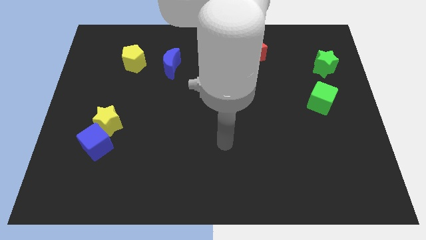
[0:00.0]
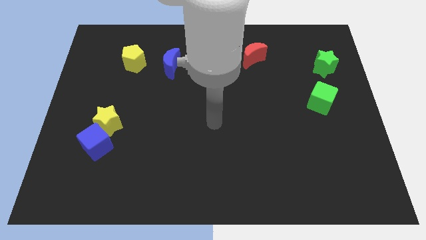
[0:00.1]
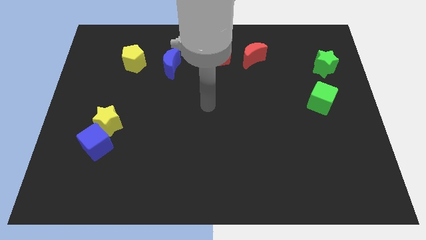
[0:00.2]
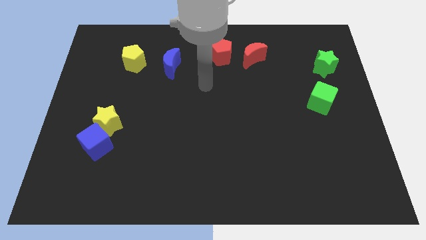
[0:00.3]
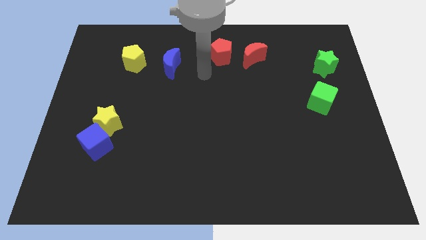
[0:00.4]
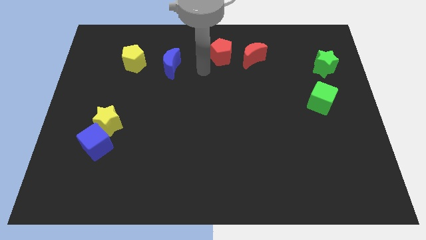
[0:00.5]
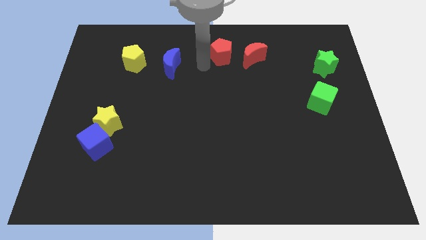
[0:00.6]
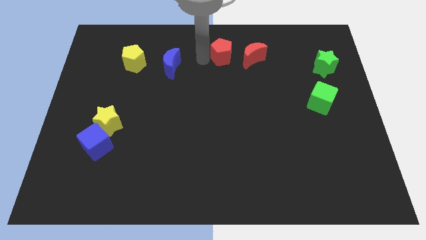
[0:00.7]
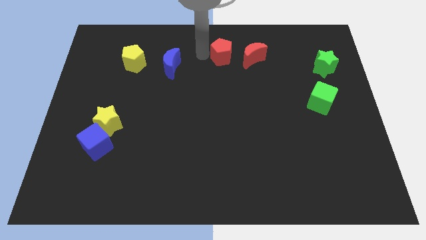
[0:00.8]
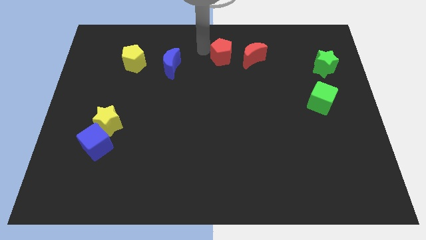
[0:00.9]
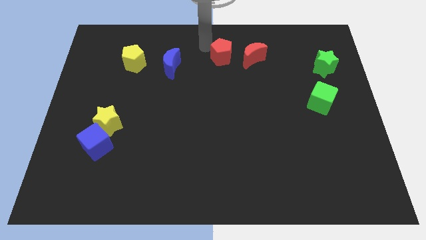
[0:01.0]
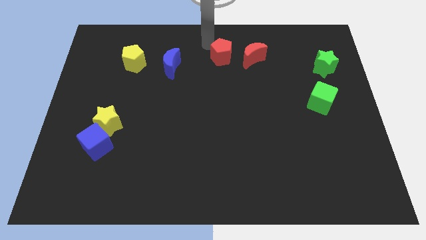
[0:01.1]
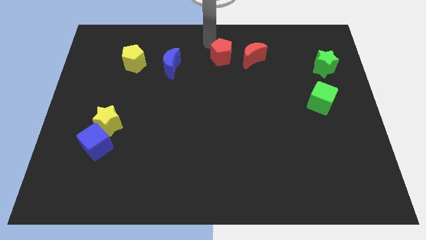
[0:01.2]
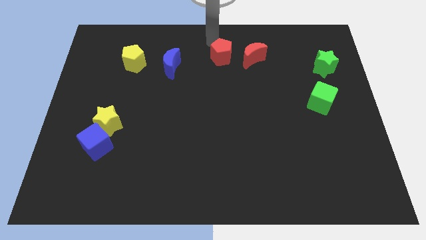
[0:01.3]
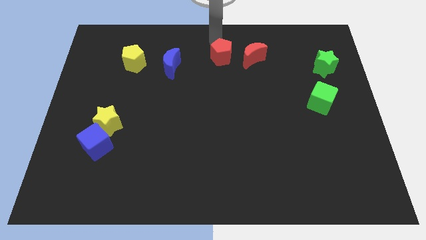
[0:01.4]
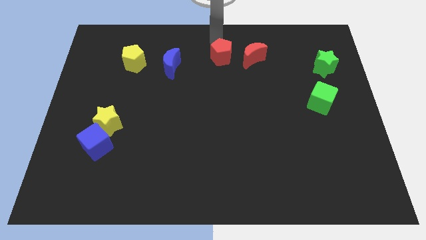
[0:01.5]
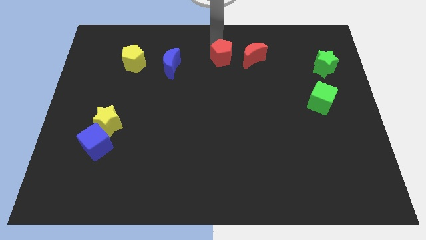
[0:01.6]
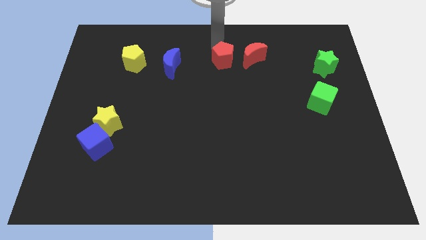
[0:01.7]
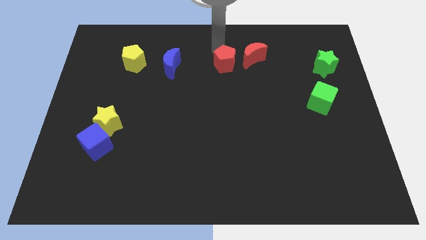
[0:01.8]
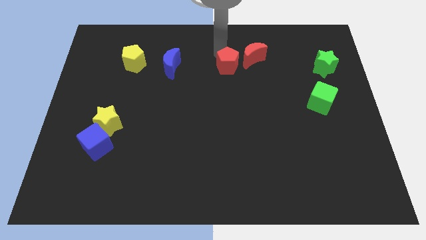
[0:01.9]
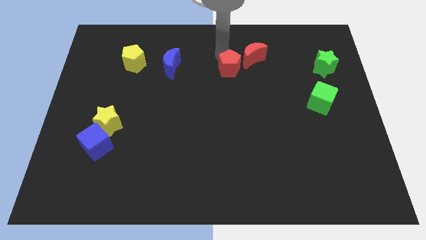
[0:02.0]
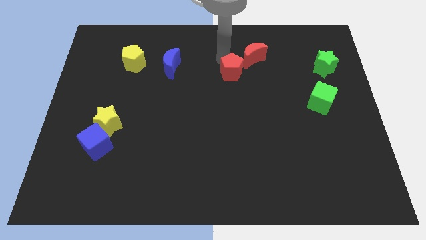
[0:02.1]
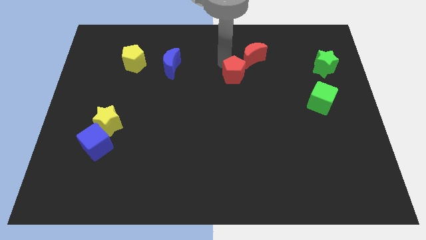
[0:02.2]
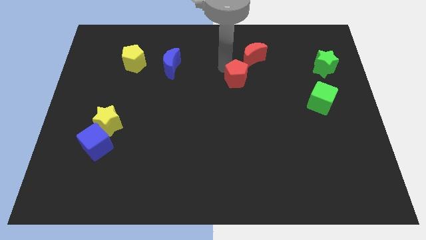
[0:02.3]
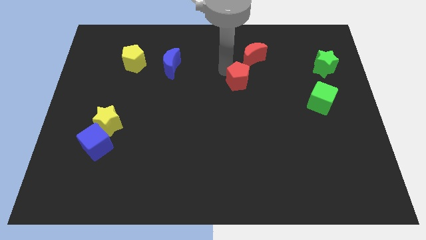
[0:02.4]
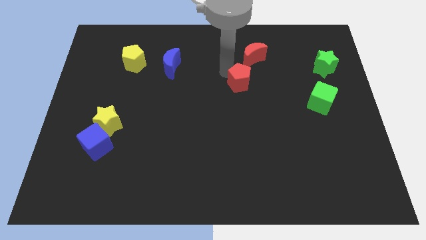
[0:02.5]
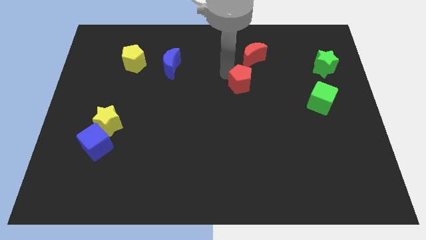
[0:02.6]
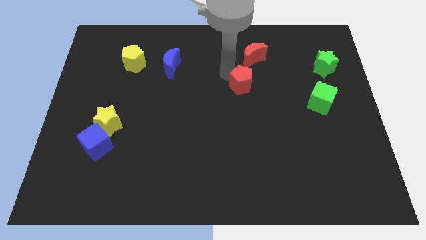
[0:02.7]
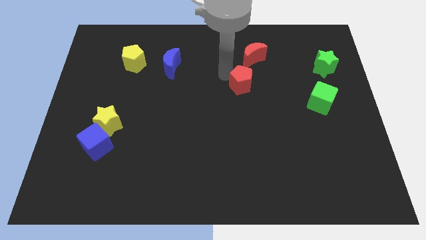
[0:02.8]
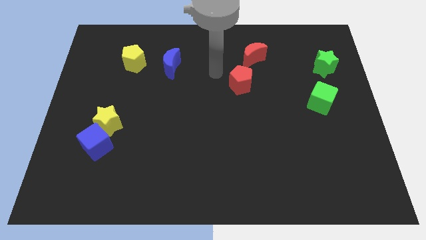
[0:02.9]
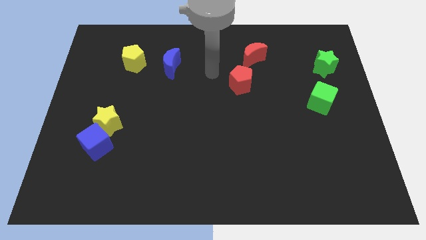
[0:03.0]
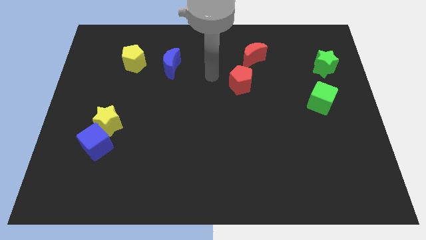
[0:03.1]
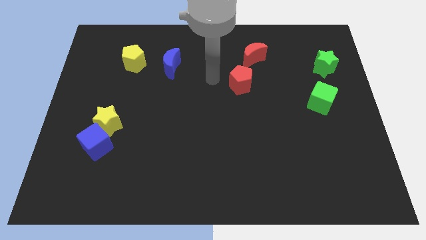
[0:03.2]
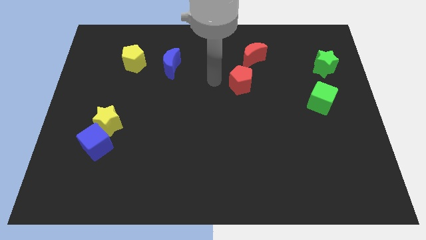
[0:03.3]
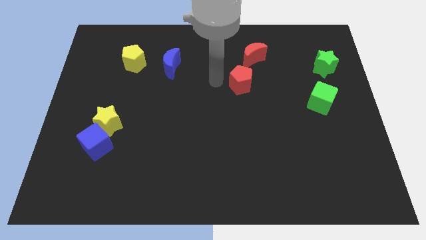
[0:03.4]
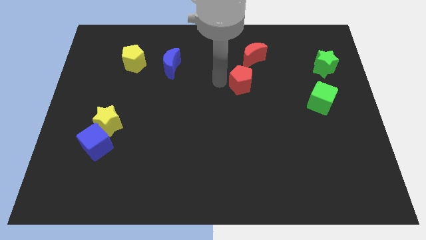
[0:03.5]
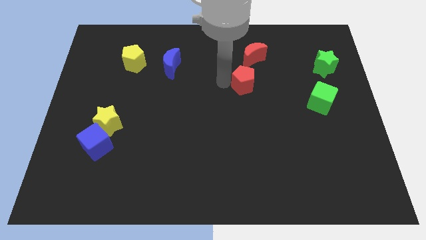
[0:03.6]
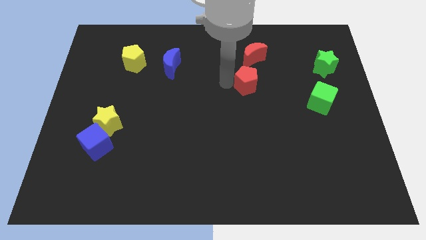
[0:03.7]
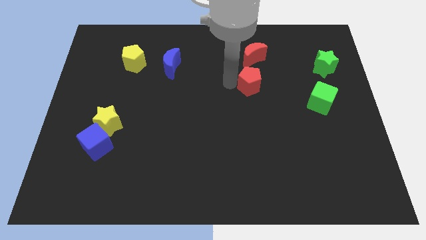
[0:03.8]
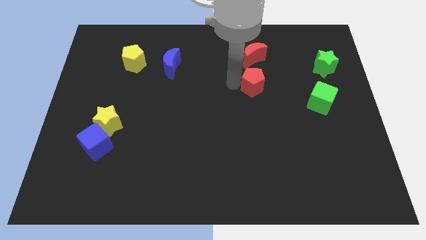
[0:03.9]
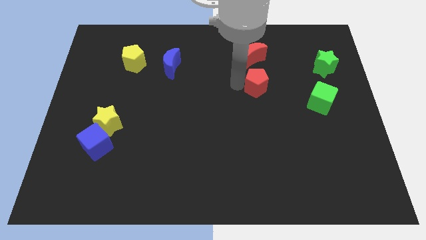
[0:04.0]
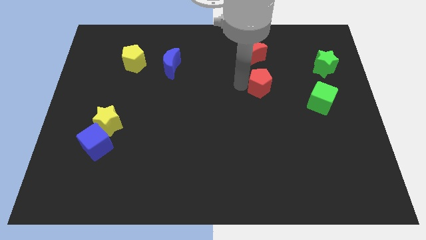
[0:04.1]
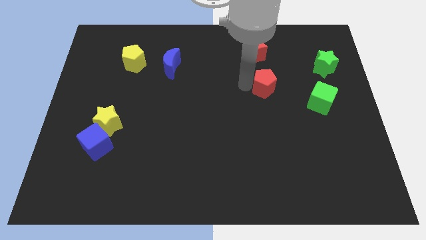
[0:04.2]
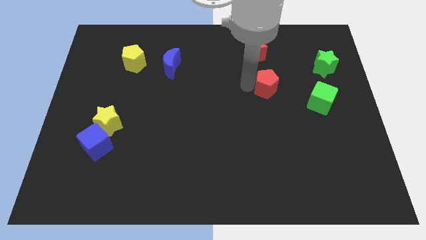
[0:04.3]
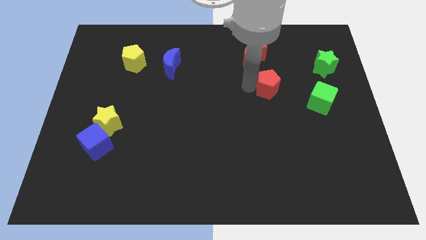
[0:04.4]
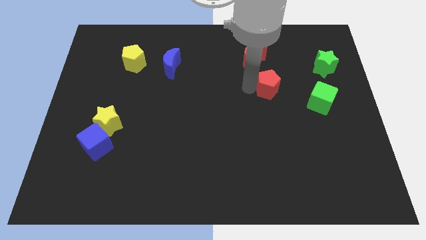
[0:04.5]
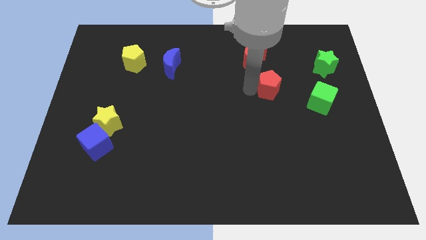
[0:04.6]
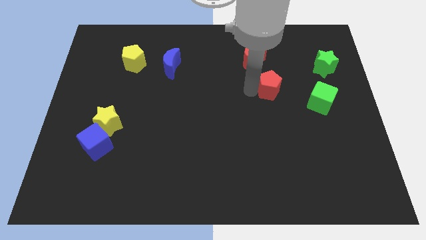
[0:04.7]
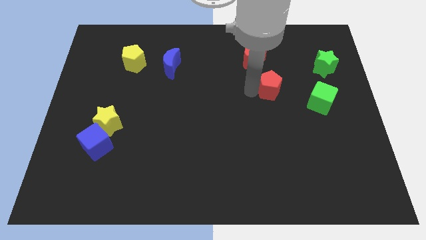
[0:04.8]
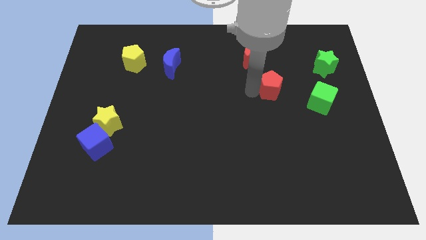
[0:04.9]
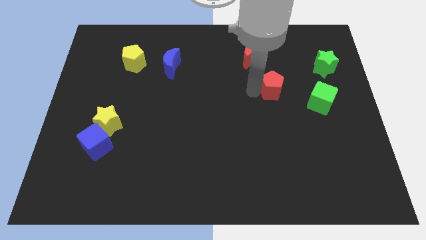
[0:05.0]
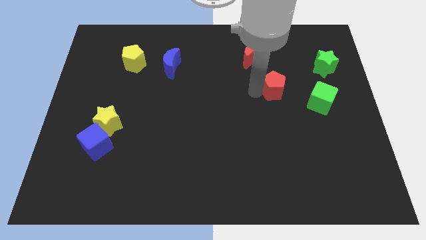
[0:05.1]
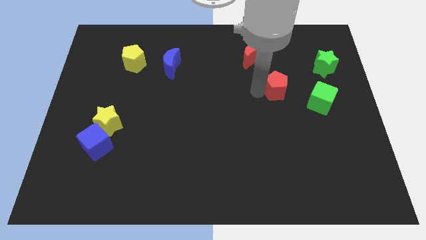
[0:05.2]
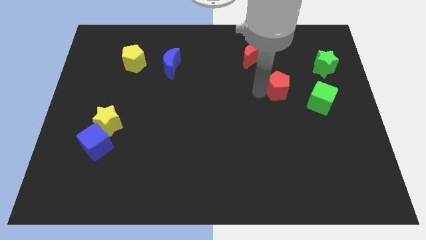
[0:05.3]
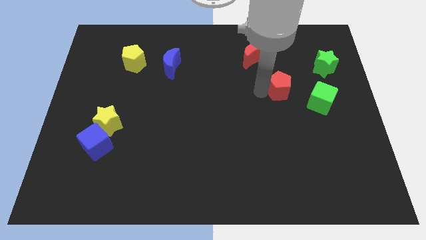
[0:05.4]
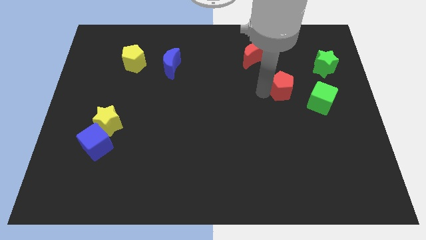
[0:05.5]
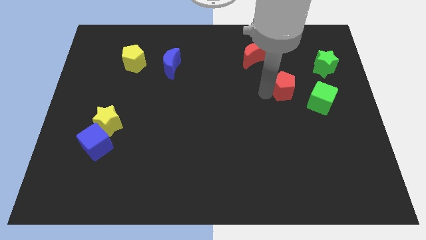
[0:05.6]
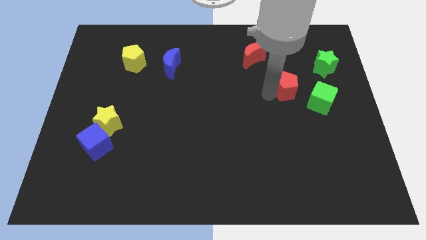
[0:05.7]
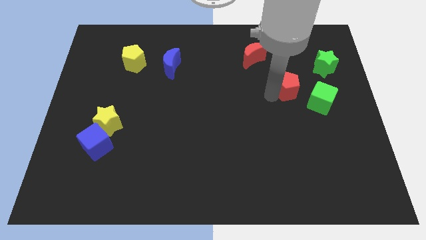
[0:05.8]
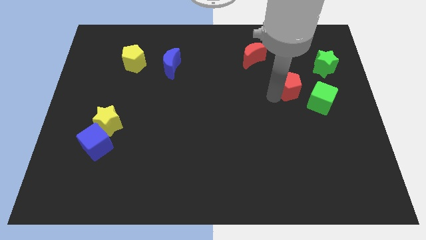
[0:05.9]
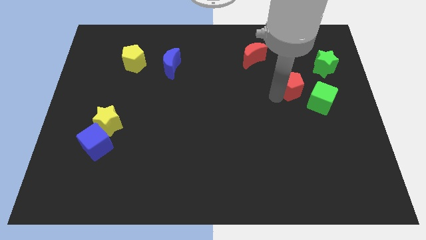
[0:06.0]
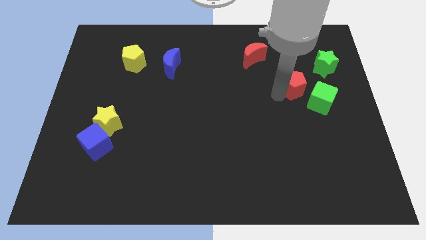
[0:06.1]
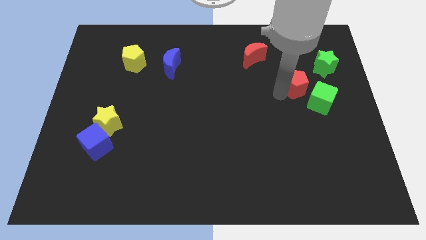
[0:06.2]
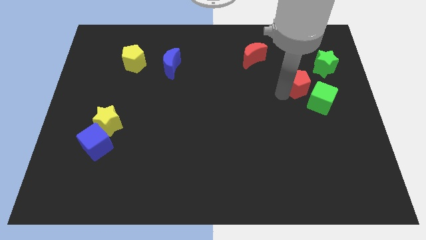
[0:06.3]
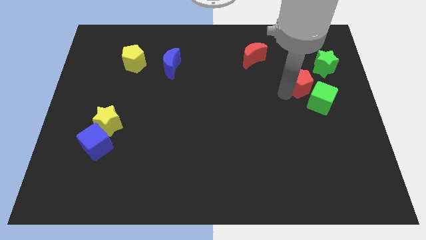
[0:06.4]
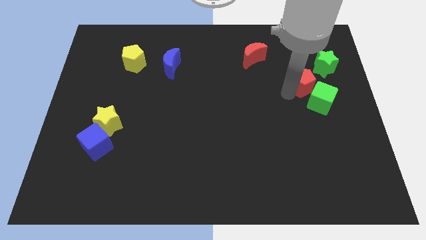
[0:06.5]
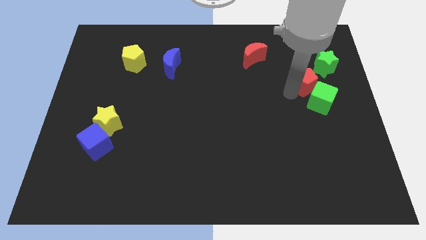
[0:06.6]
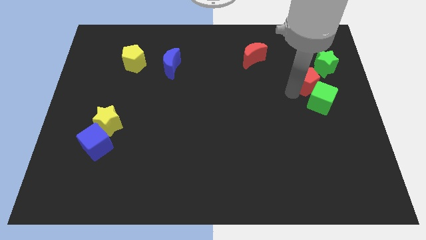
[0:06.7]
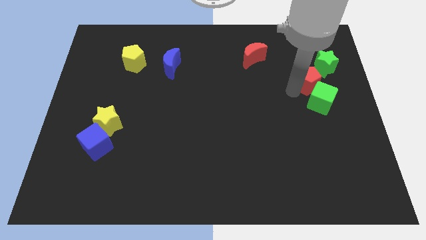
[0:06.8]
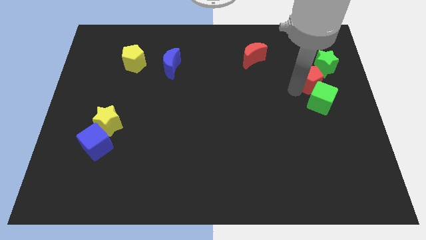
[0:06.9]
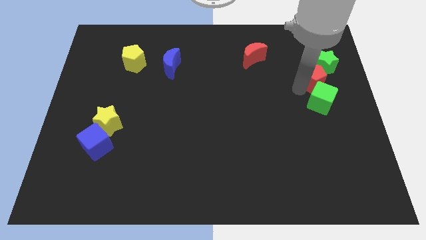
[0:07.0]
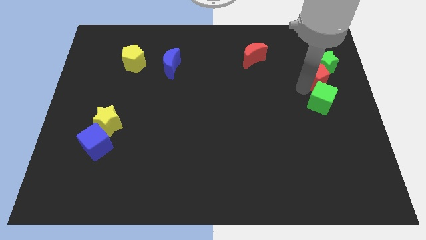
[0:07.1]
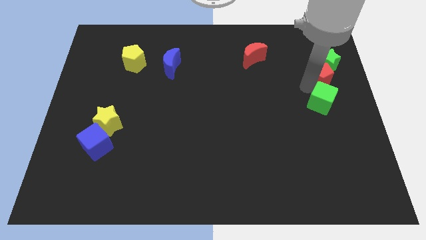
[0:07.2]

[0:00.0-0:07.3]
push the red pentagon to the green star

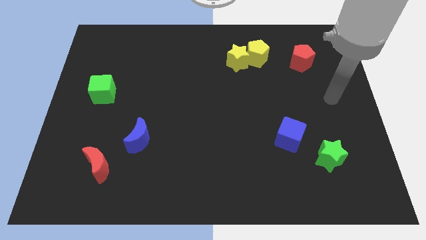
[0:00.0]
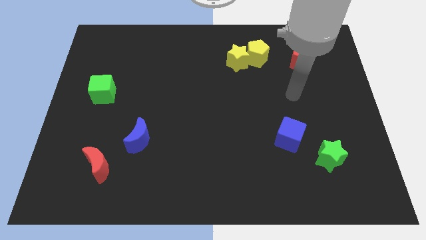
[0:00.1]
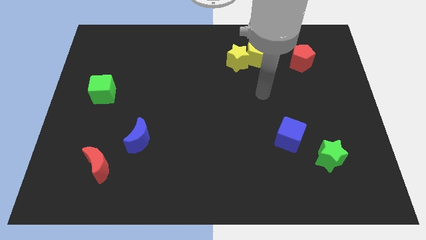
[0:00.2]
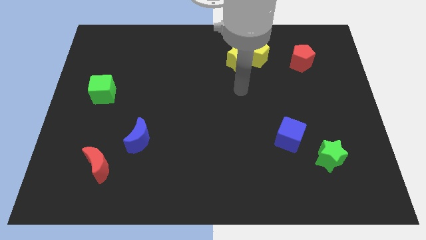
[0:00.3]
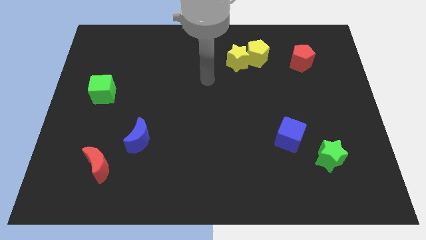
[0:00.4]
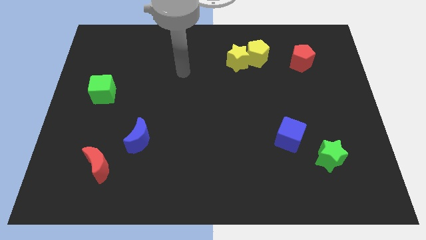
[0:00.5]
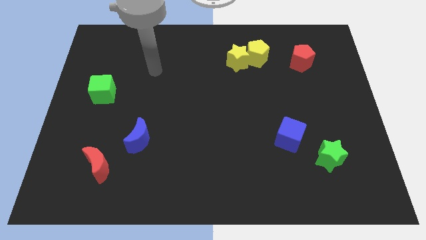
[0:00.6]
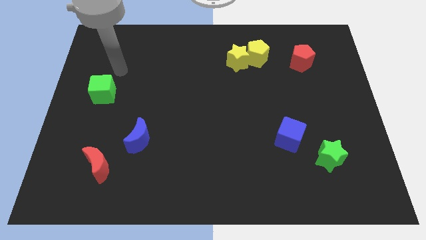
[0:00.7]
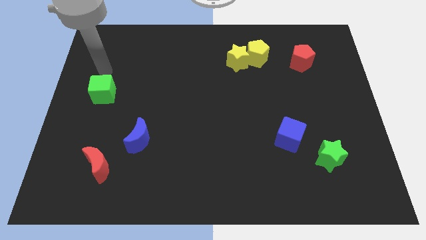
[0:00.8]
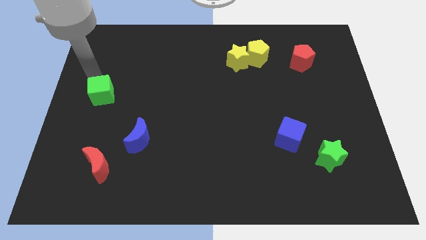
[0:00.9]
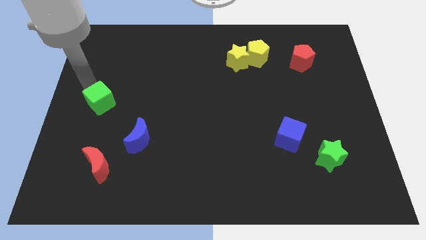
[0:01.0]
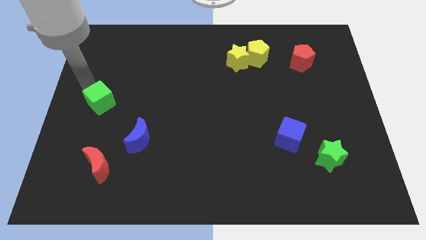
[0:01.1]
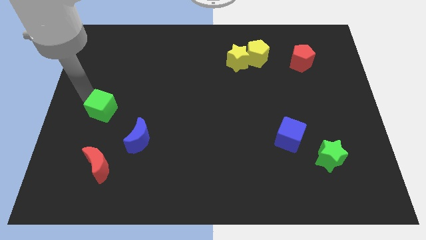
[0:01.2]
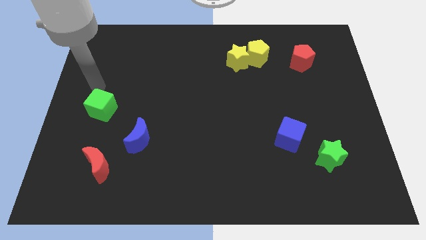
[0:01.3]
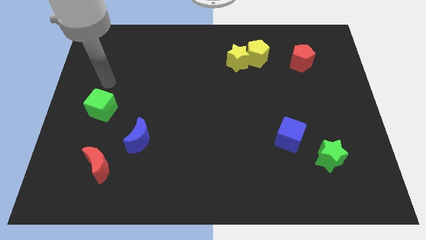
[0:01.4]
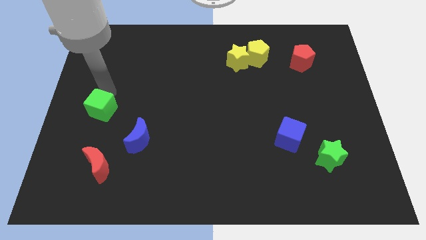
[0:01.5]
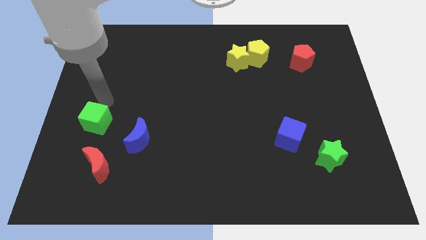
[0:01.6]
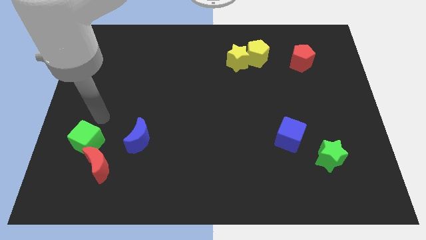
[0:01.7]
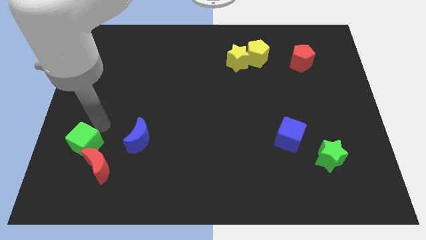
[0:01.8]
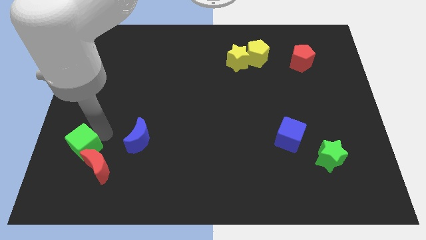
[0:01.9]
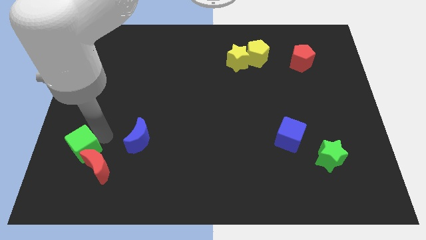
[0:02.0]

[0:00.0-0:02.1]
push the green cube to the red moon
